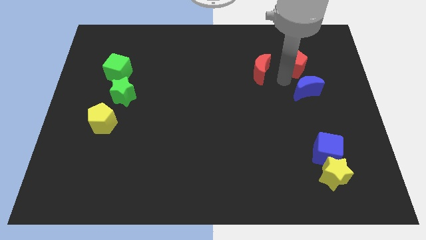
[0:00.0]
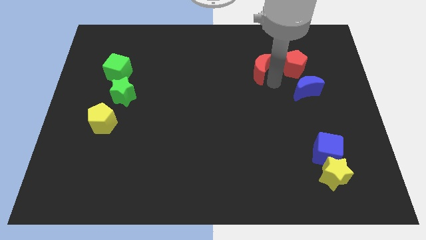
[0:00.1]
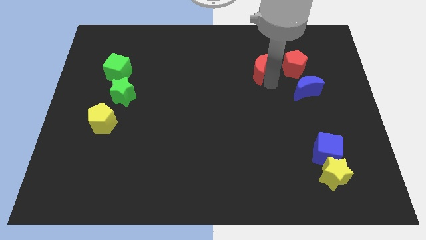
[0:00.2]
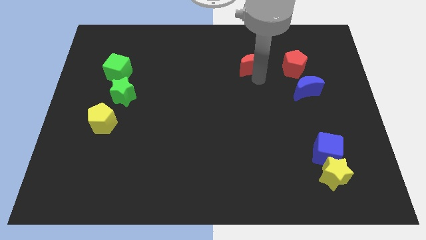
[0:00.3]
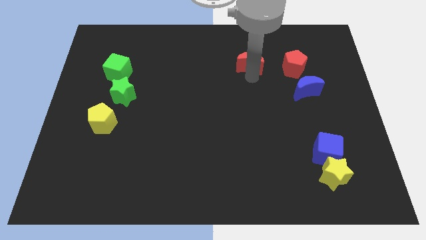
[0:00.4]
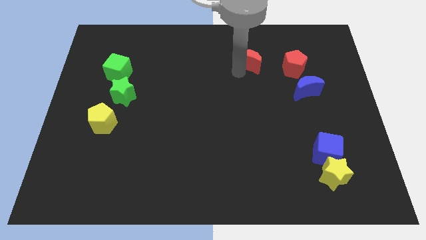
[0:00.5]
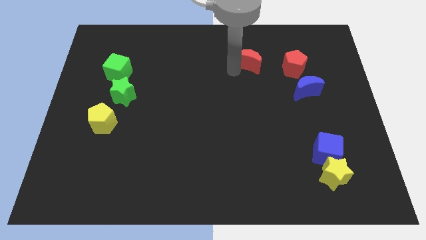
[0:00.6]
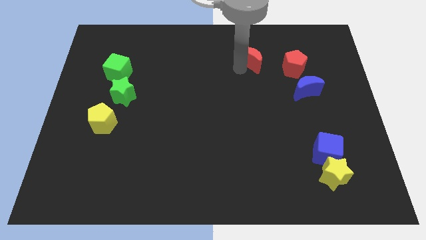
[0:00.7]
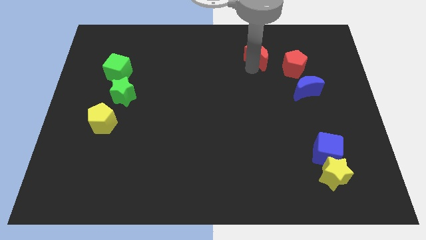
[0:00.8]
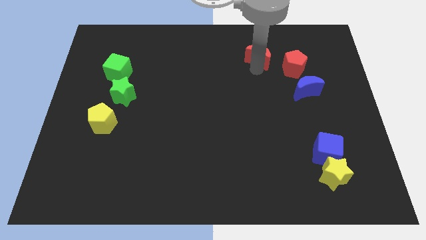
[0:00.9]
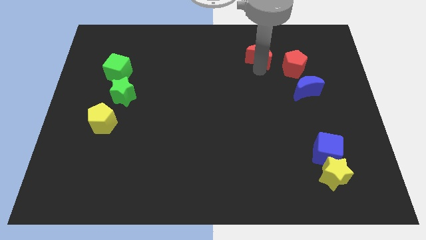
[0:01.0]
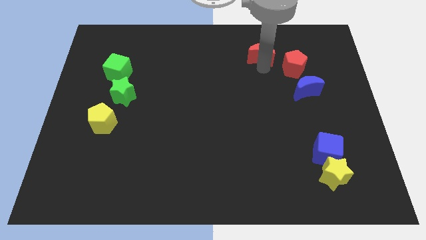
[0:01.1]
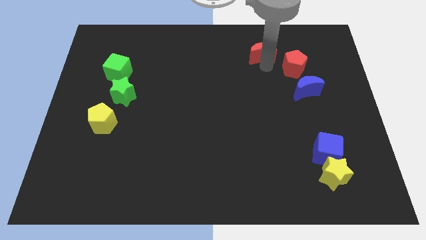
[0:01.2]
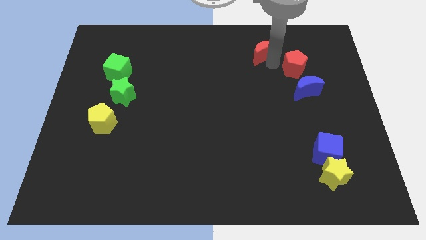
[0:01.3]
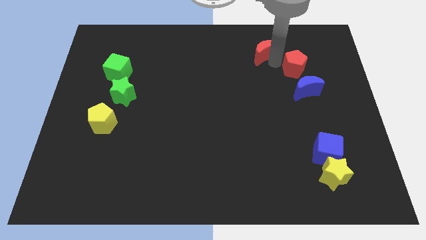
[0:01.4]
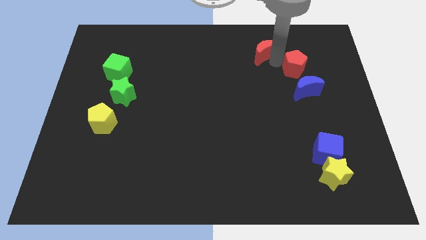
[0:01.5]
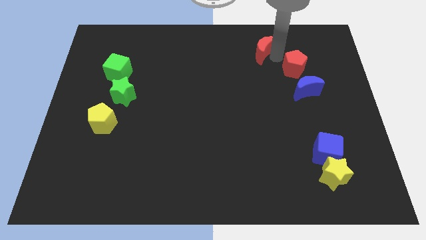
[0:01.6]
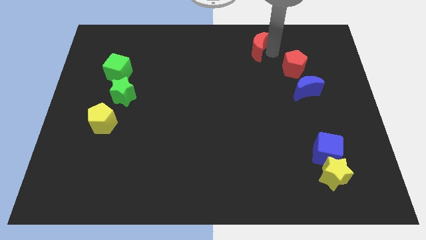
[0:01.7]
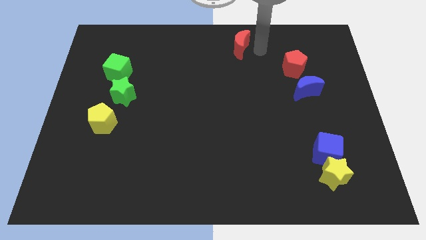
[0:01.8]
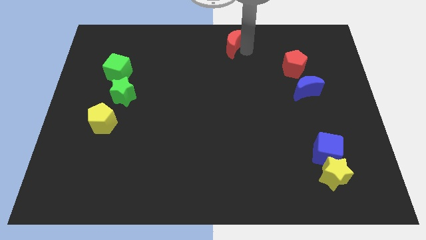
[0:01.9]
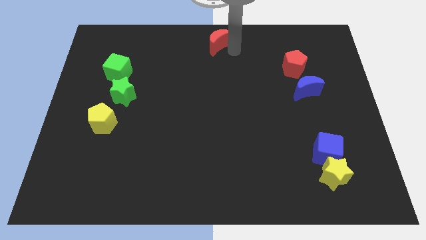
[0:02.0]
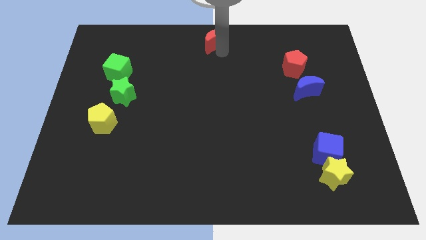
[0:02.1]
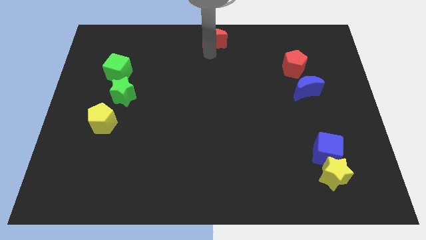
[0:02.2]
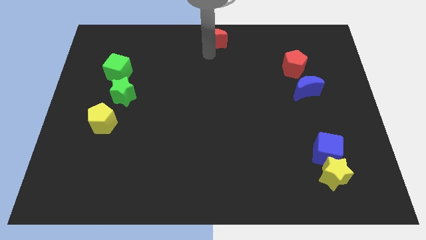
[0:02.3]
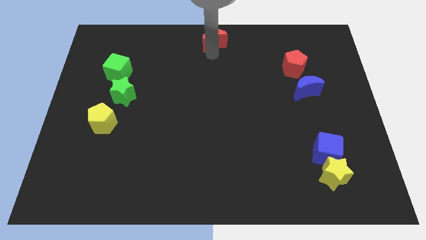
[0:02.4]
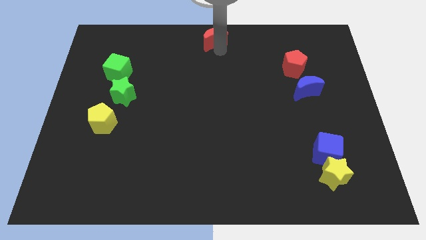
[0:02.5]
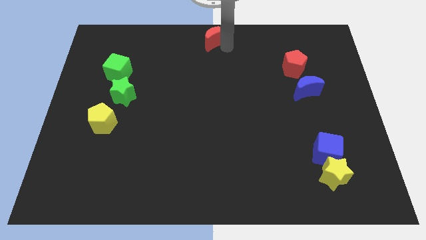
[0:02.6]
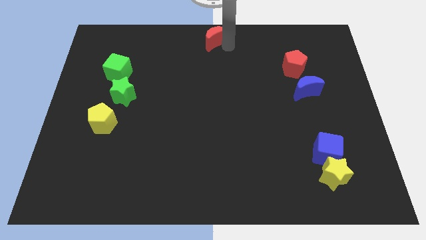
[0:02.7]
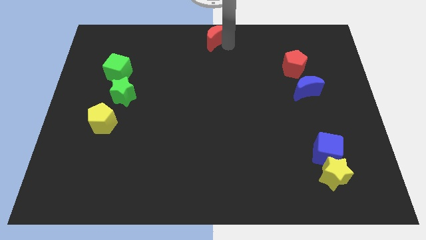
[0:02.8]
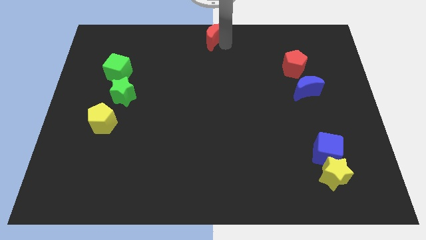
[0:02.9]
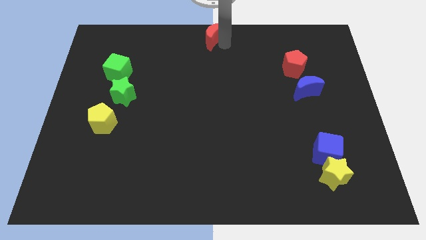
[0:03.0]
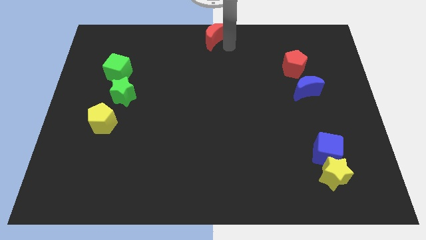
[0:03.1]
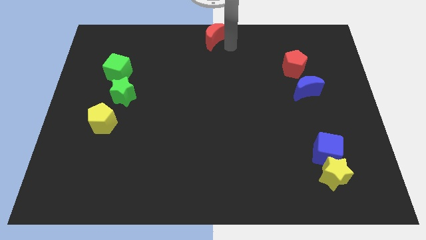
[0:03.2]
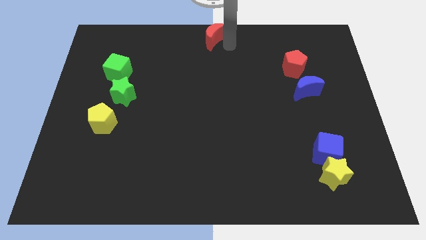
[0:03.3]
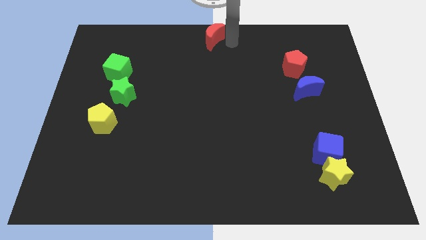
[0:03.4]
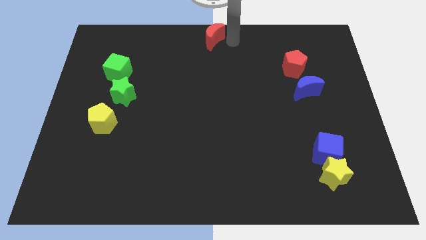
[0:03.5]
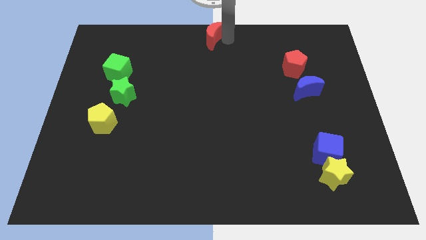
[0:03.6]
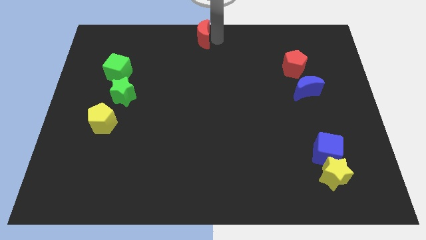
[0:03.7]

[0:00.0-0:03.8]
push the red moon to the top center

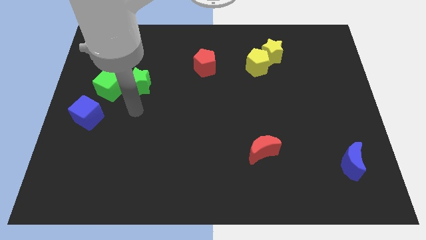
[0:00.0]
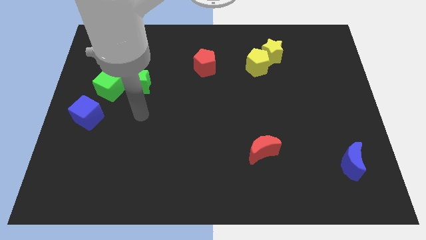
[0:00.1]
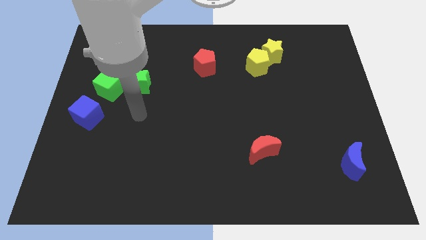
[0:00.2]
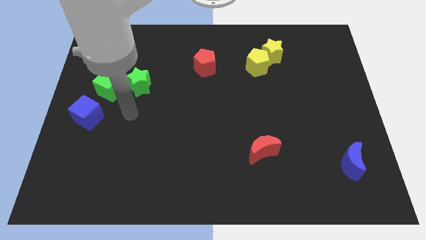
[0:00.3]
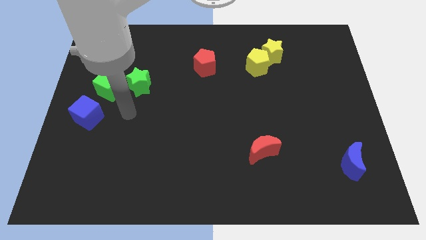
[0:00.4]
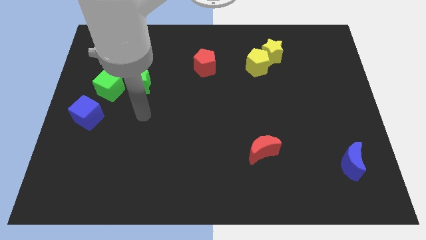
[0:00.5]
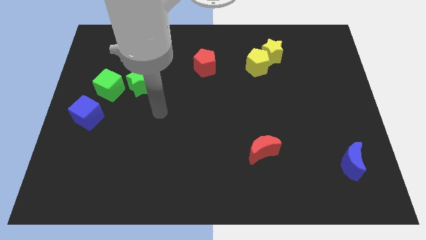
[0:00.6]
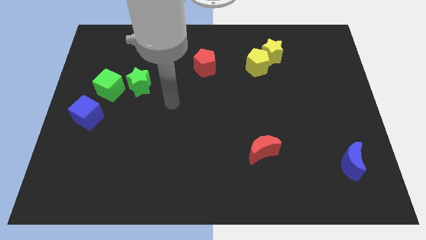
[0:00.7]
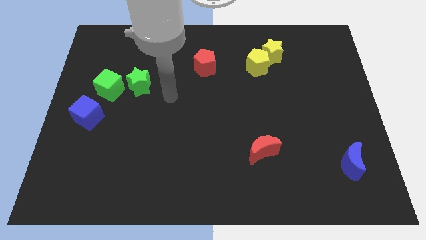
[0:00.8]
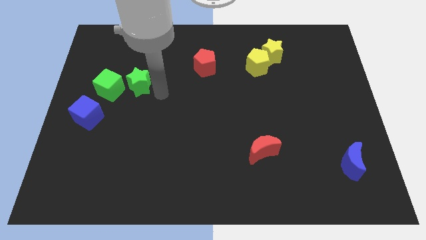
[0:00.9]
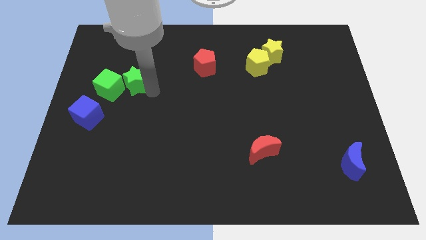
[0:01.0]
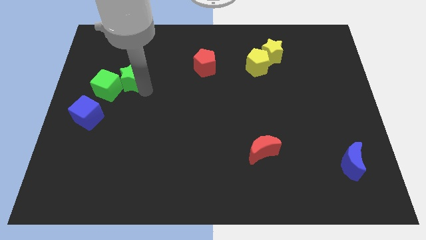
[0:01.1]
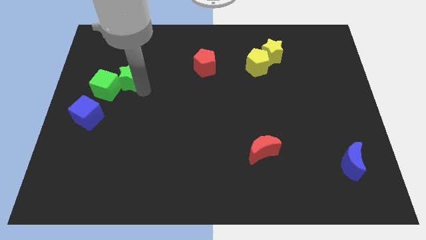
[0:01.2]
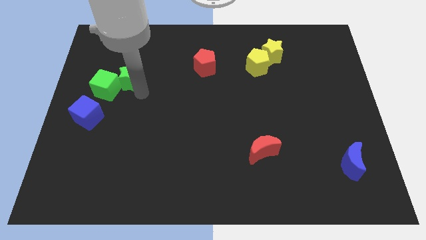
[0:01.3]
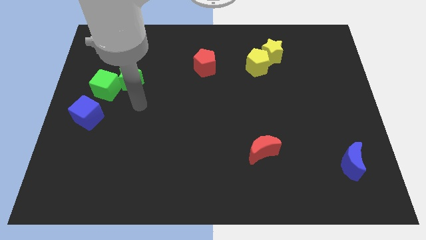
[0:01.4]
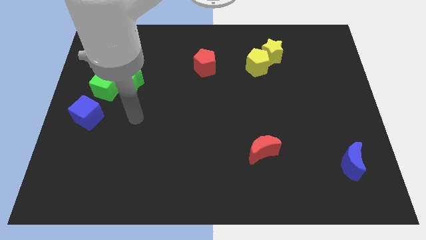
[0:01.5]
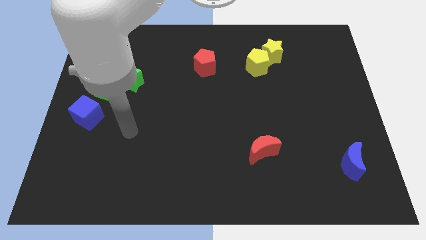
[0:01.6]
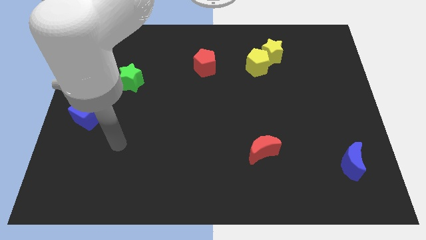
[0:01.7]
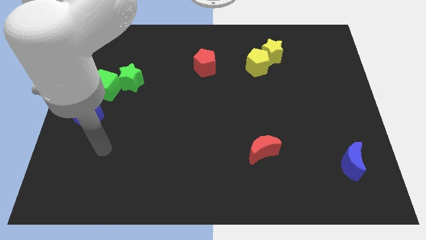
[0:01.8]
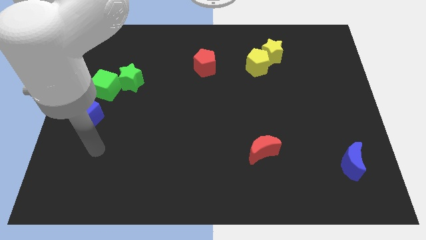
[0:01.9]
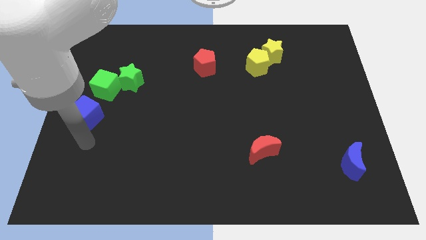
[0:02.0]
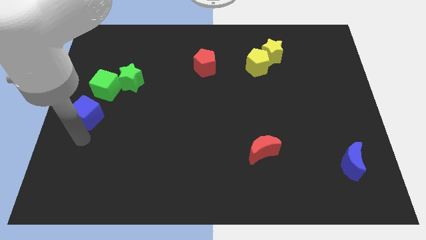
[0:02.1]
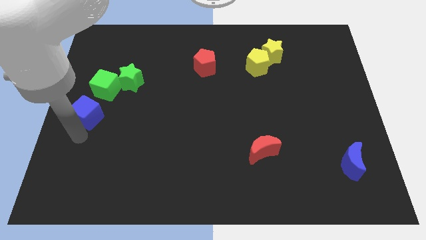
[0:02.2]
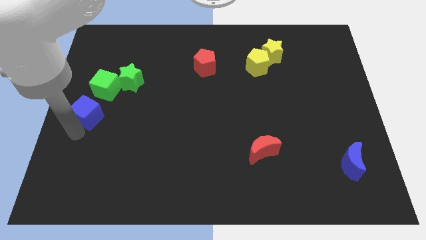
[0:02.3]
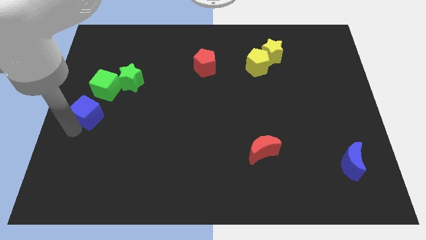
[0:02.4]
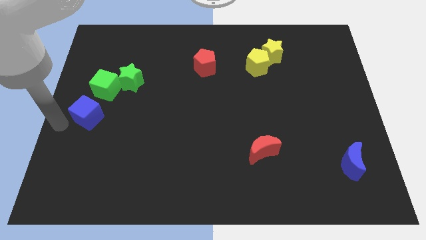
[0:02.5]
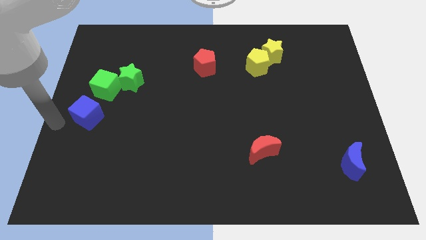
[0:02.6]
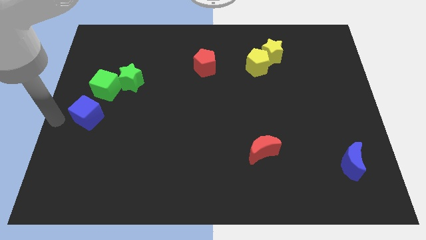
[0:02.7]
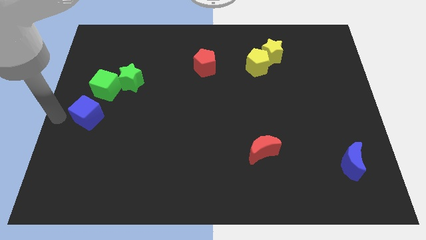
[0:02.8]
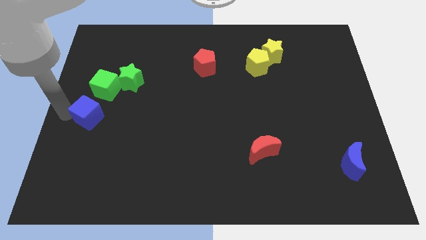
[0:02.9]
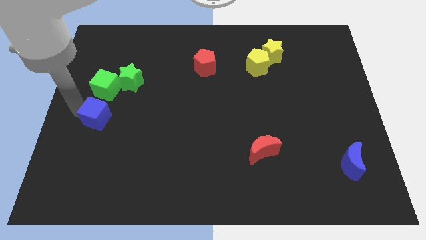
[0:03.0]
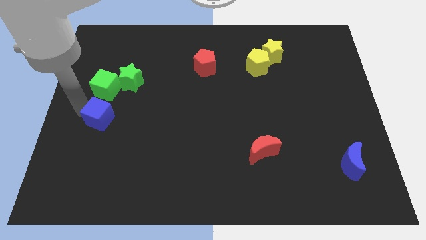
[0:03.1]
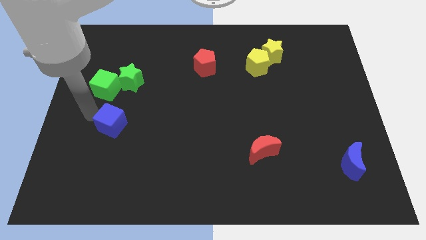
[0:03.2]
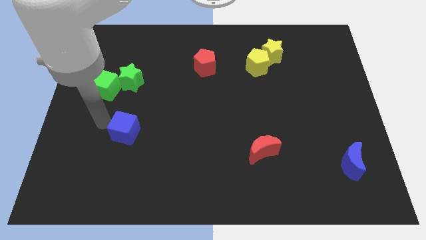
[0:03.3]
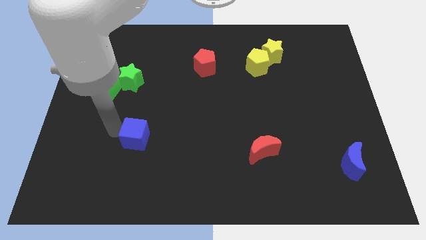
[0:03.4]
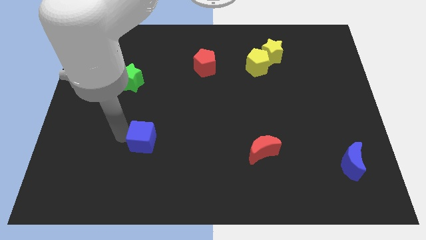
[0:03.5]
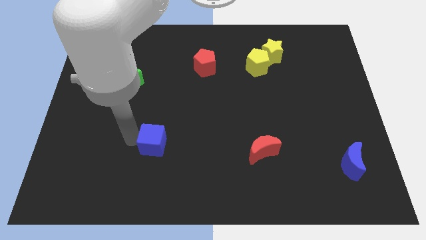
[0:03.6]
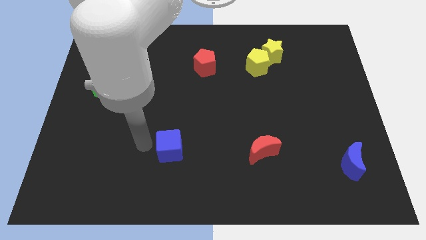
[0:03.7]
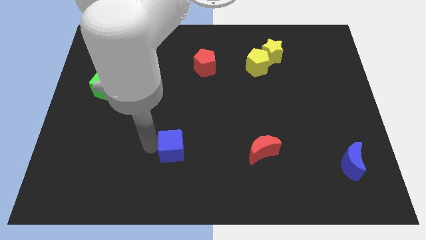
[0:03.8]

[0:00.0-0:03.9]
push the blue cube towards the center of the board

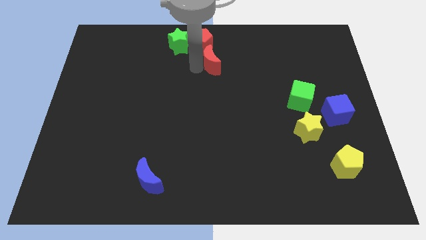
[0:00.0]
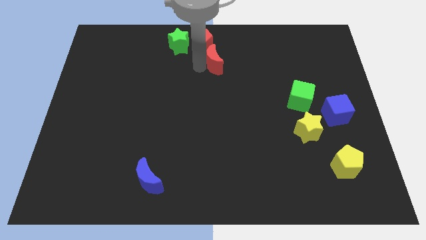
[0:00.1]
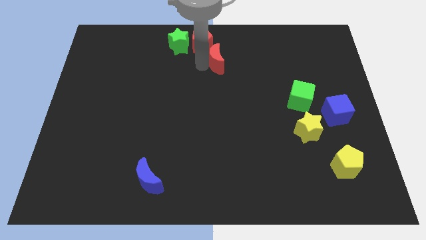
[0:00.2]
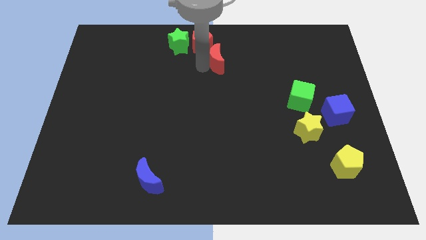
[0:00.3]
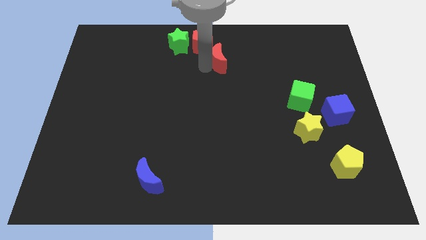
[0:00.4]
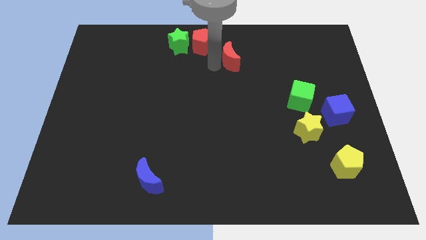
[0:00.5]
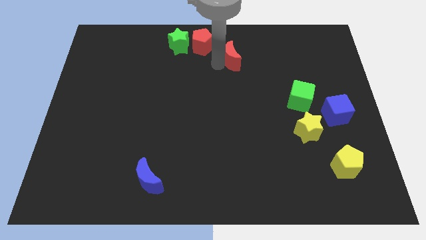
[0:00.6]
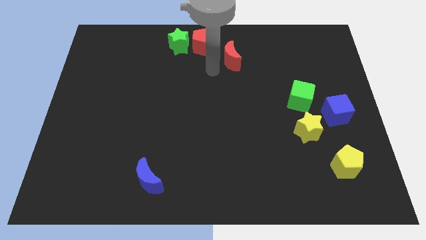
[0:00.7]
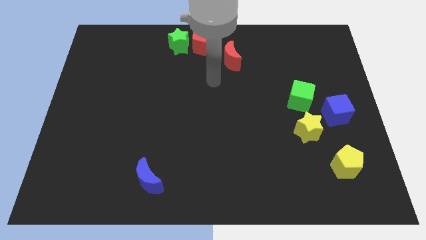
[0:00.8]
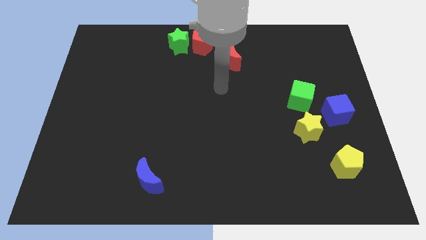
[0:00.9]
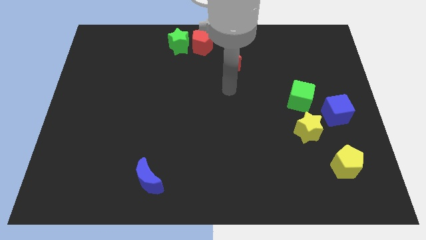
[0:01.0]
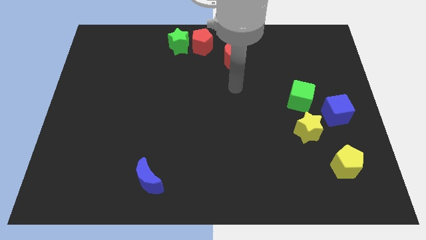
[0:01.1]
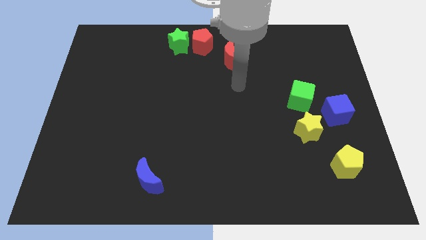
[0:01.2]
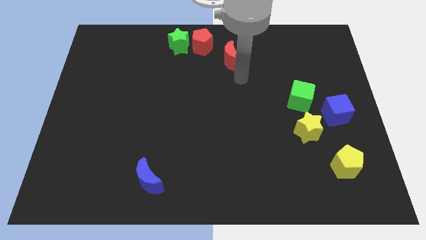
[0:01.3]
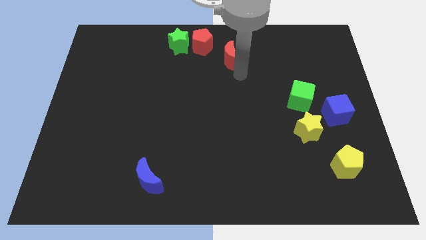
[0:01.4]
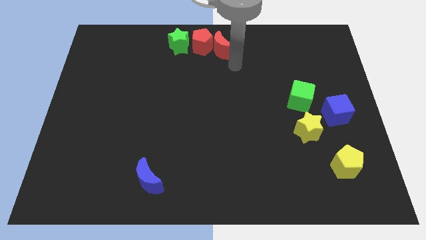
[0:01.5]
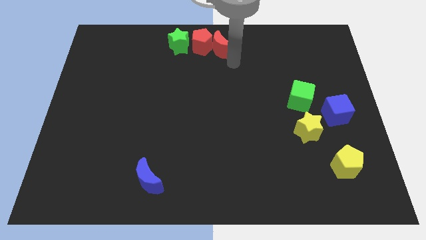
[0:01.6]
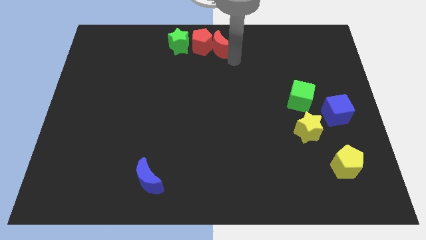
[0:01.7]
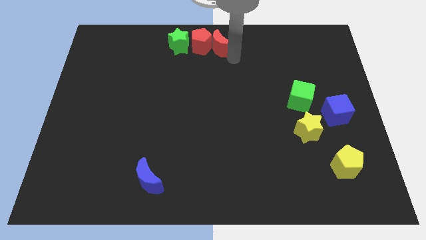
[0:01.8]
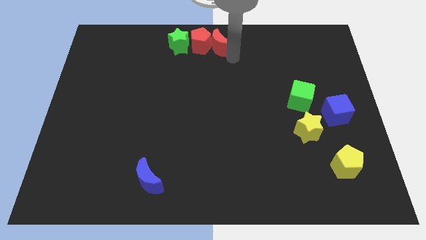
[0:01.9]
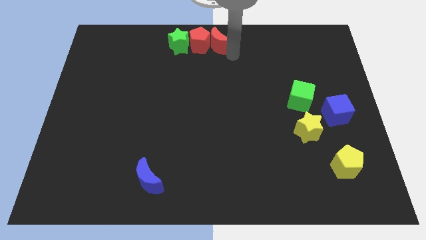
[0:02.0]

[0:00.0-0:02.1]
place the red crescent right to the red pentagon
